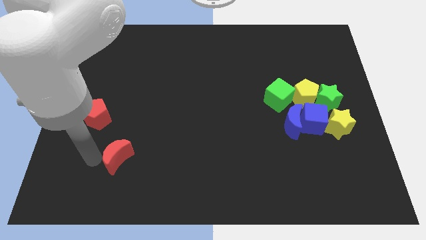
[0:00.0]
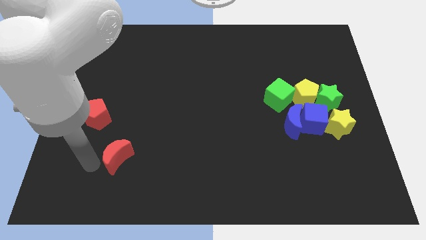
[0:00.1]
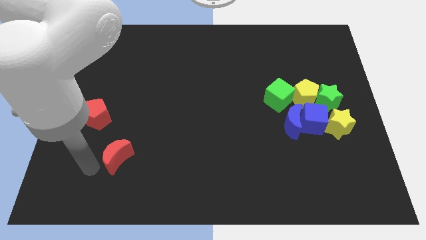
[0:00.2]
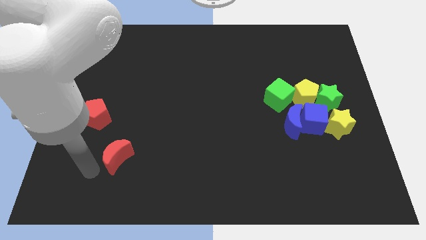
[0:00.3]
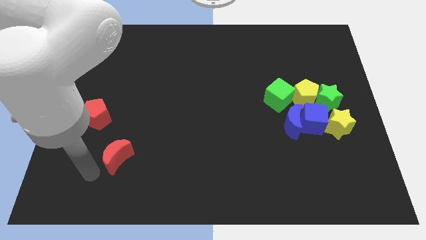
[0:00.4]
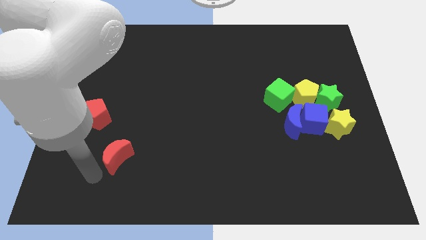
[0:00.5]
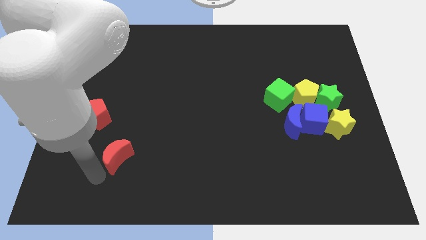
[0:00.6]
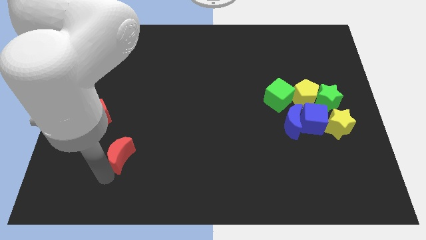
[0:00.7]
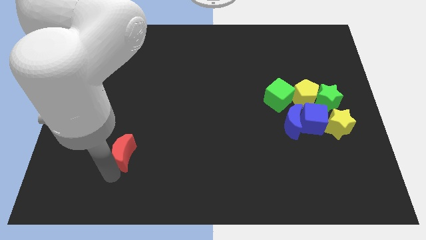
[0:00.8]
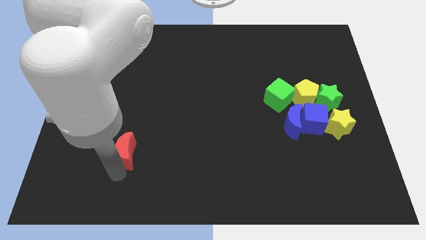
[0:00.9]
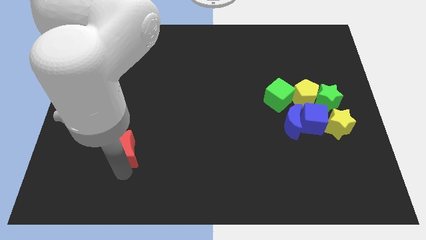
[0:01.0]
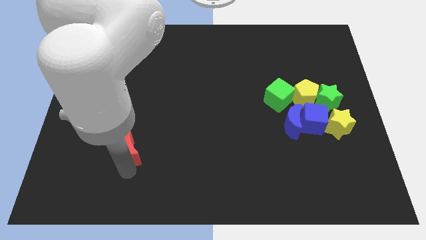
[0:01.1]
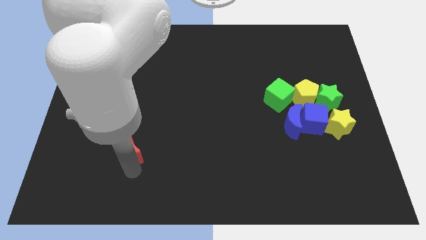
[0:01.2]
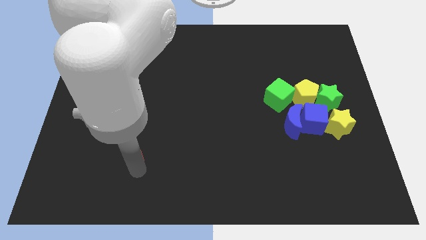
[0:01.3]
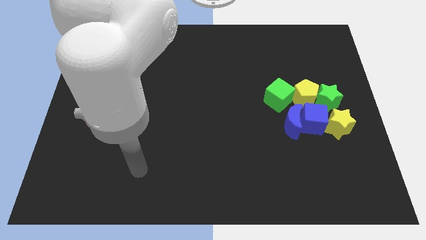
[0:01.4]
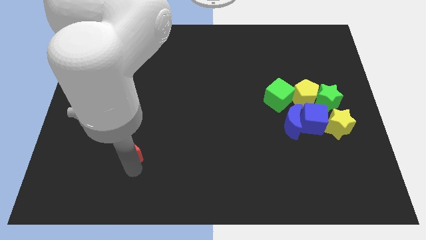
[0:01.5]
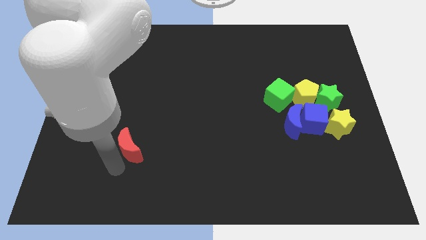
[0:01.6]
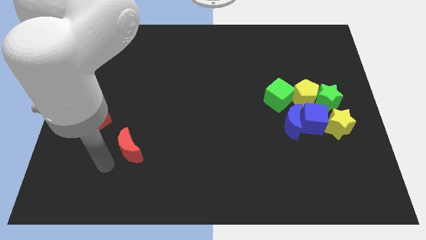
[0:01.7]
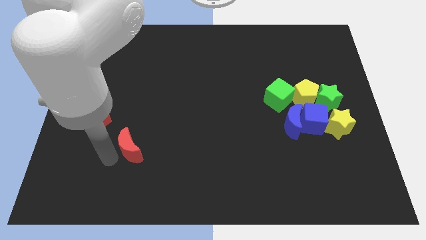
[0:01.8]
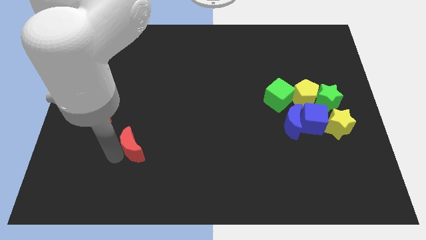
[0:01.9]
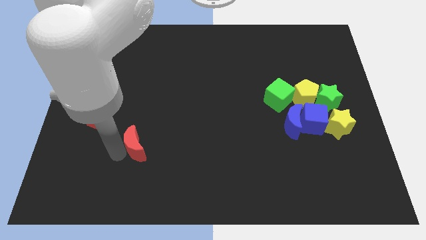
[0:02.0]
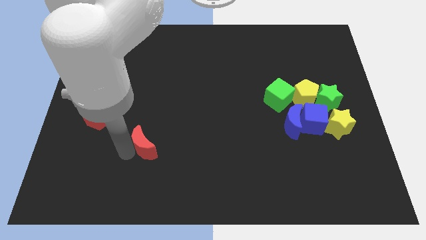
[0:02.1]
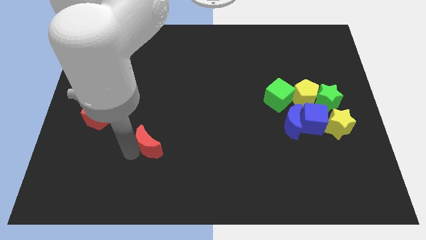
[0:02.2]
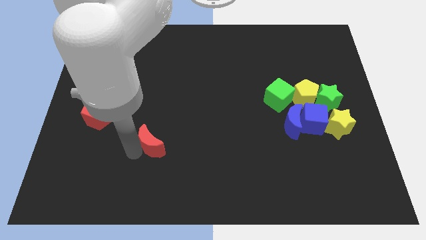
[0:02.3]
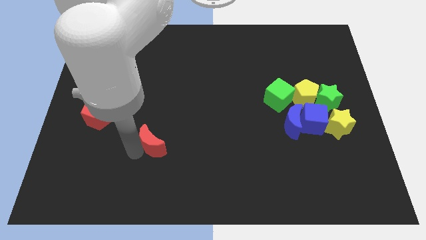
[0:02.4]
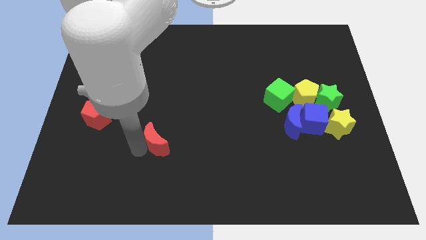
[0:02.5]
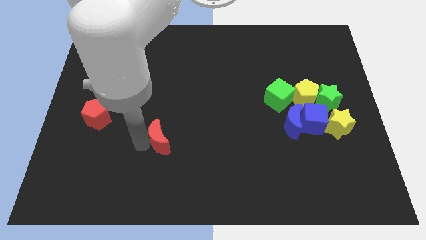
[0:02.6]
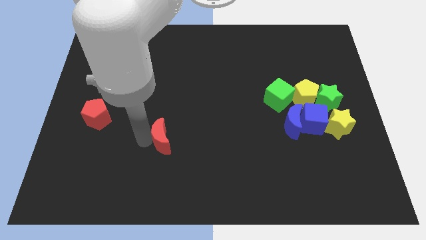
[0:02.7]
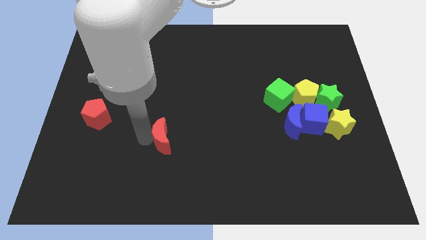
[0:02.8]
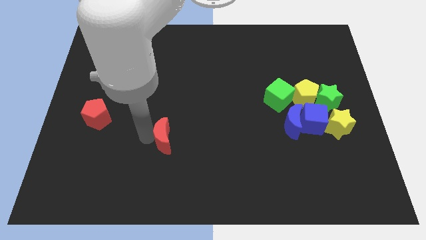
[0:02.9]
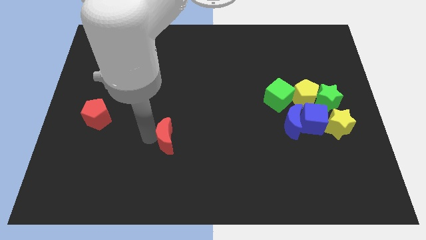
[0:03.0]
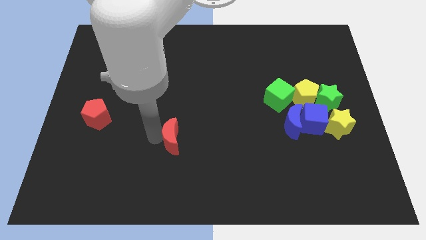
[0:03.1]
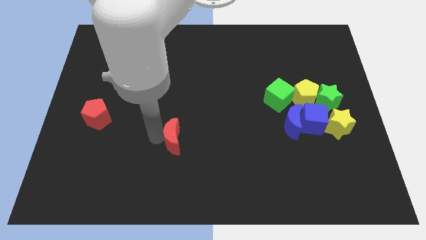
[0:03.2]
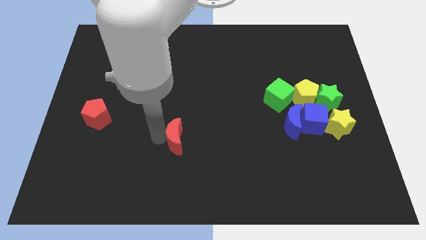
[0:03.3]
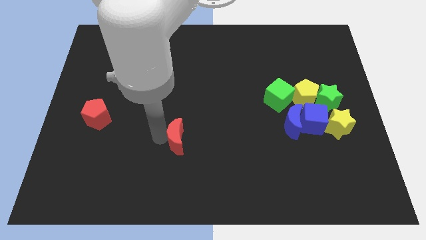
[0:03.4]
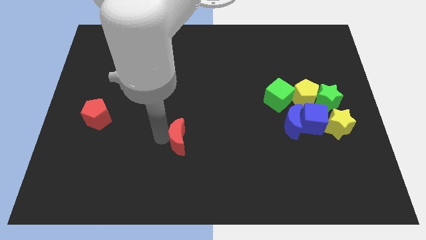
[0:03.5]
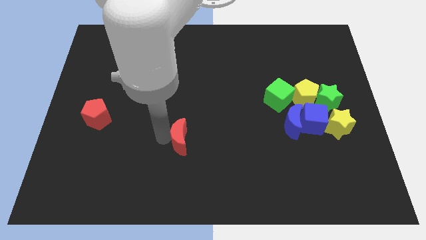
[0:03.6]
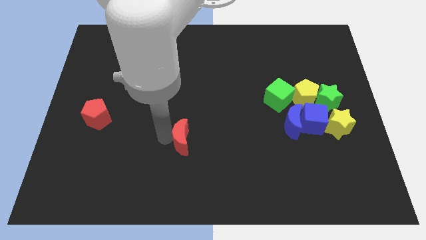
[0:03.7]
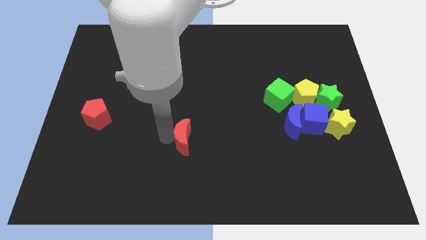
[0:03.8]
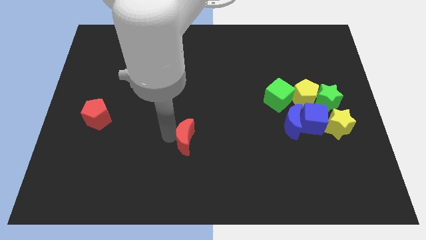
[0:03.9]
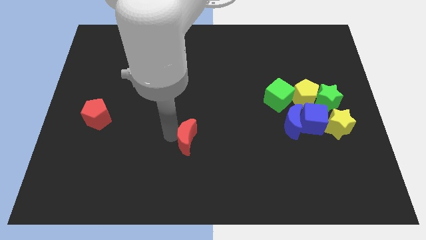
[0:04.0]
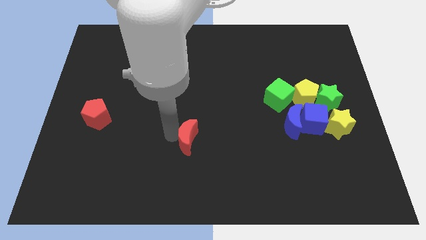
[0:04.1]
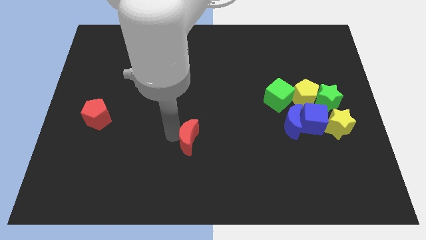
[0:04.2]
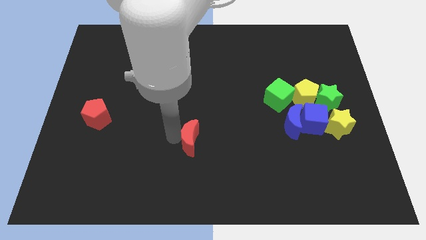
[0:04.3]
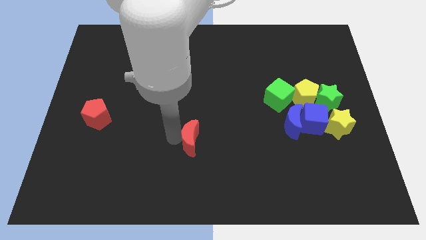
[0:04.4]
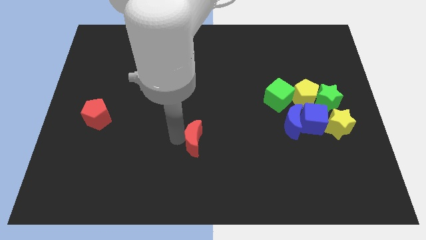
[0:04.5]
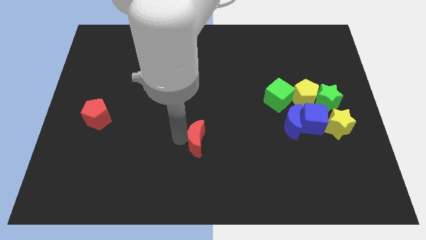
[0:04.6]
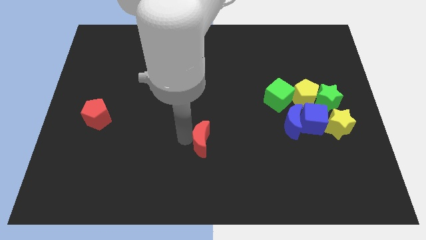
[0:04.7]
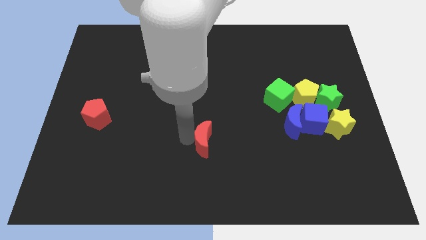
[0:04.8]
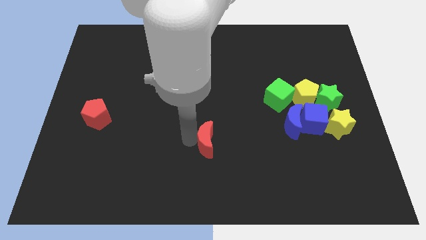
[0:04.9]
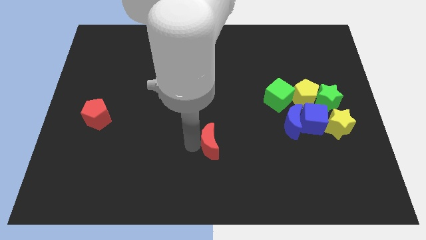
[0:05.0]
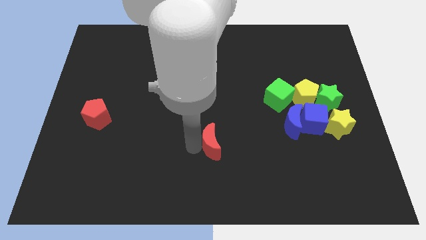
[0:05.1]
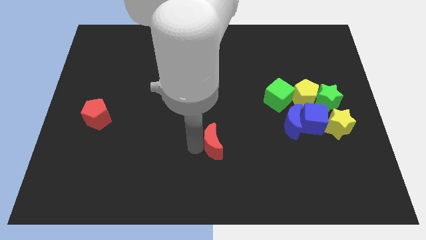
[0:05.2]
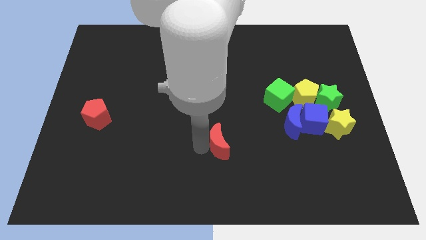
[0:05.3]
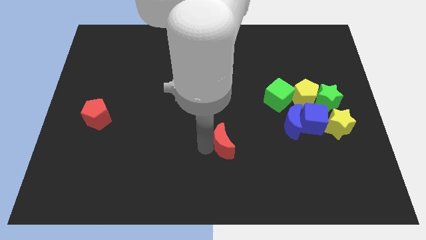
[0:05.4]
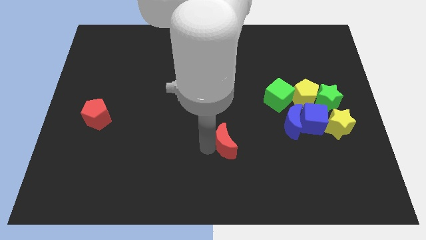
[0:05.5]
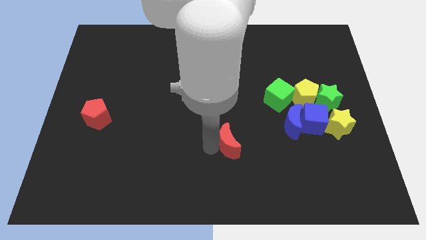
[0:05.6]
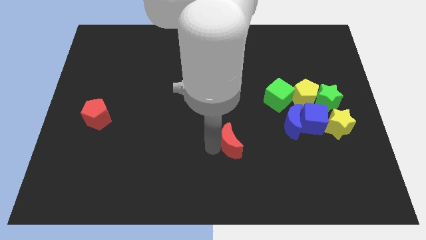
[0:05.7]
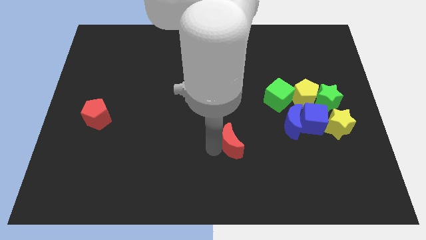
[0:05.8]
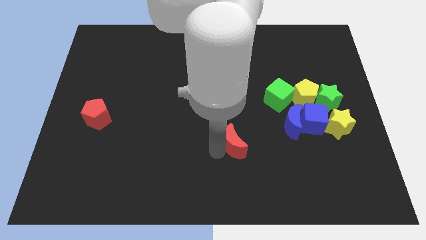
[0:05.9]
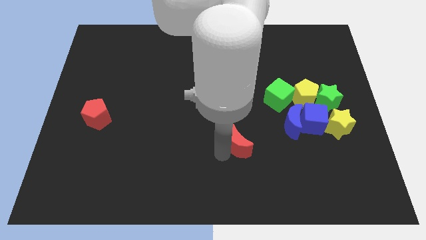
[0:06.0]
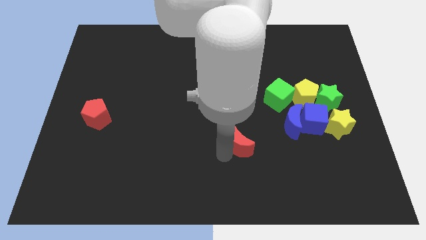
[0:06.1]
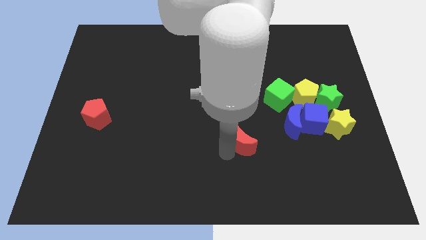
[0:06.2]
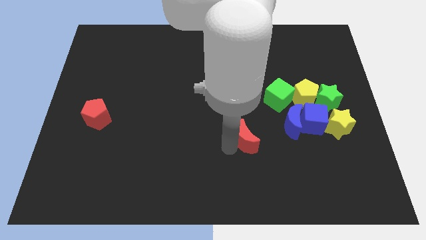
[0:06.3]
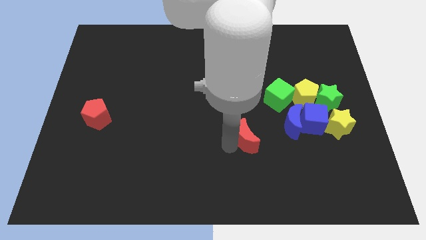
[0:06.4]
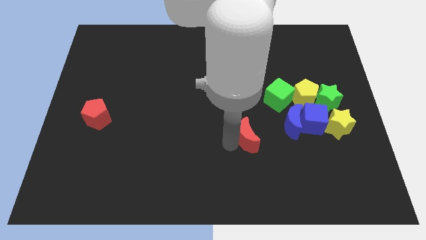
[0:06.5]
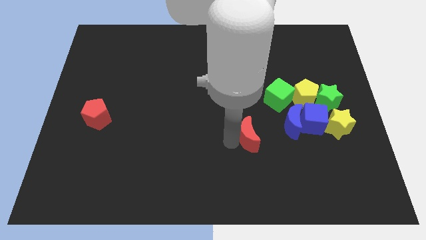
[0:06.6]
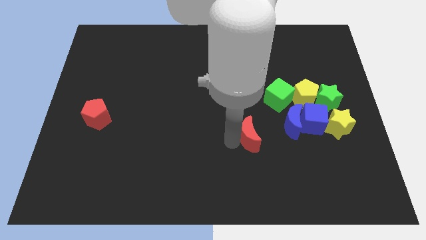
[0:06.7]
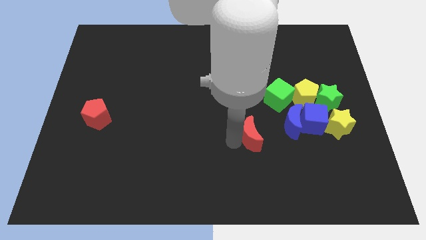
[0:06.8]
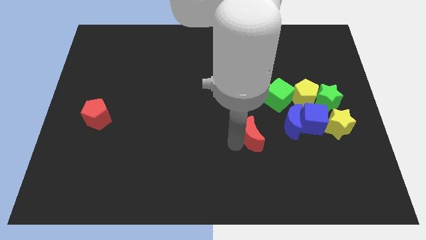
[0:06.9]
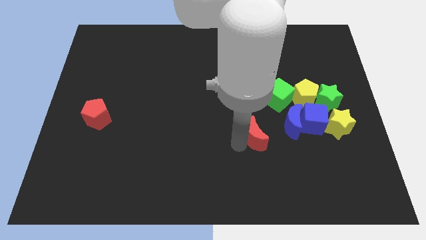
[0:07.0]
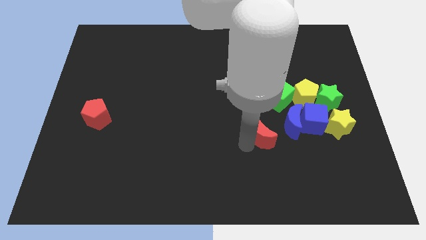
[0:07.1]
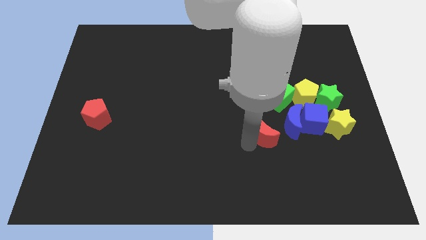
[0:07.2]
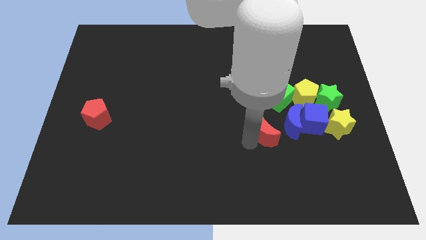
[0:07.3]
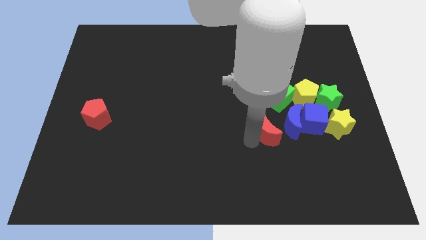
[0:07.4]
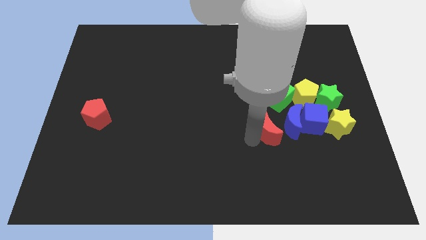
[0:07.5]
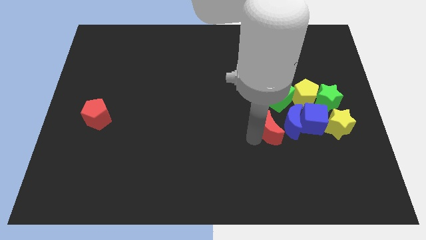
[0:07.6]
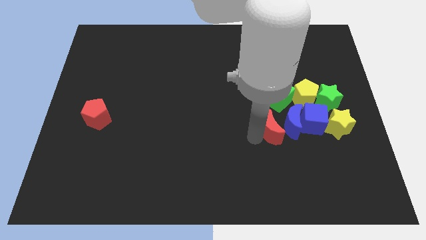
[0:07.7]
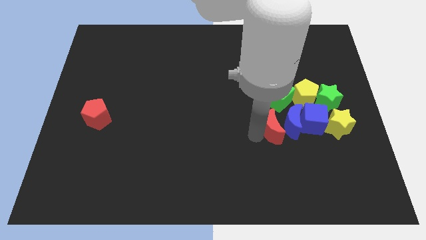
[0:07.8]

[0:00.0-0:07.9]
push the red moon into the group of blocks

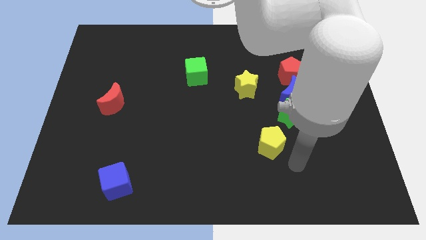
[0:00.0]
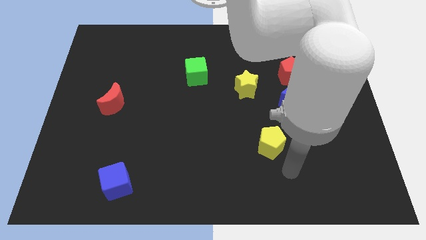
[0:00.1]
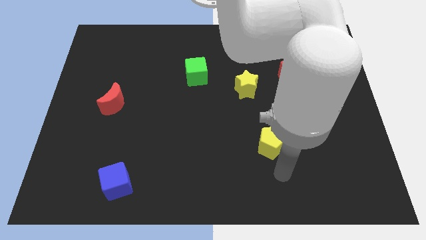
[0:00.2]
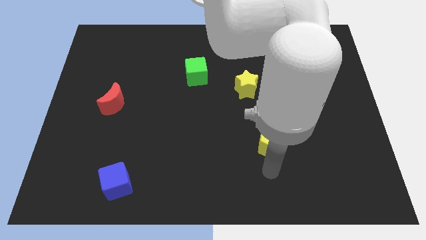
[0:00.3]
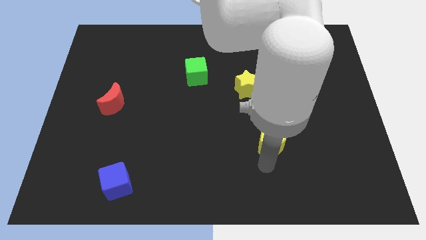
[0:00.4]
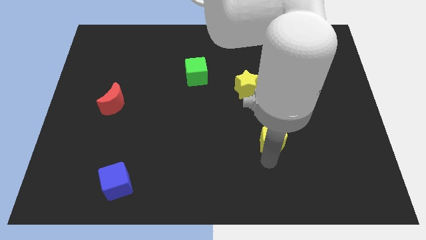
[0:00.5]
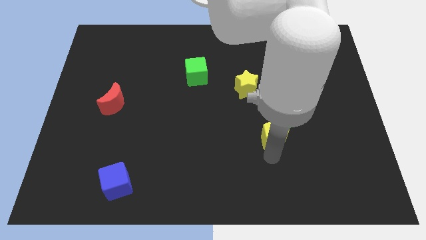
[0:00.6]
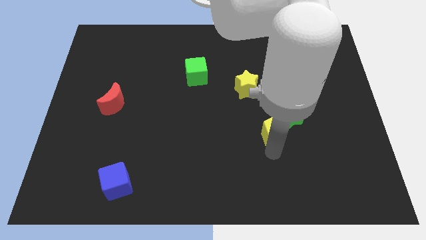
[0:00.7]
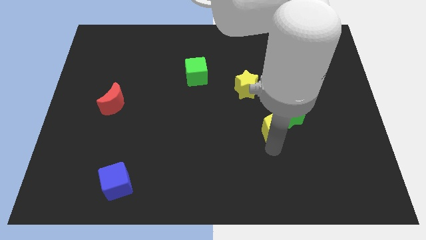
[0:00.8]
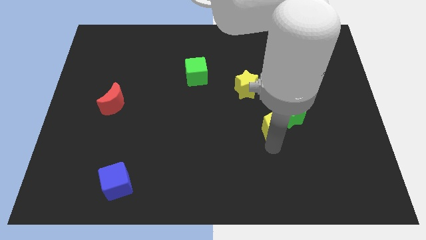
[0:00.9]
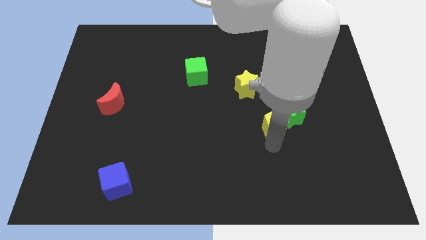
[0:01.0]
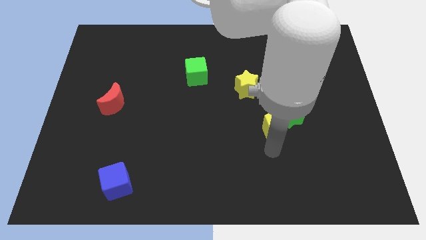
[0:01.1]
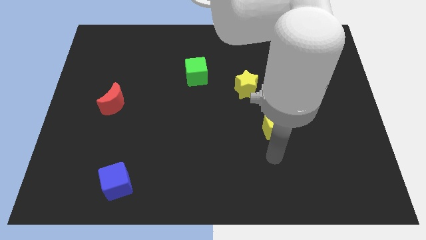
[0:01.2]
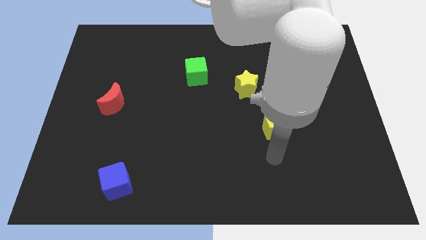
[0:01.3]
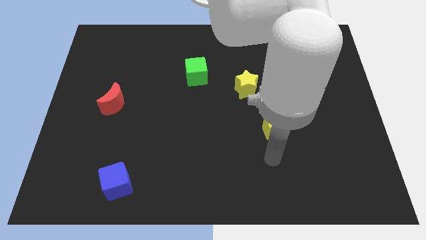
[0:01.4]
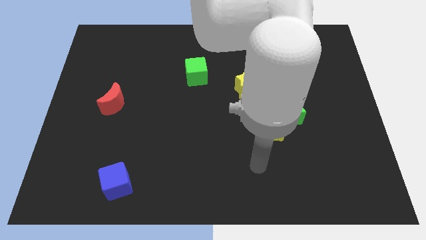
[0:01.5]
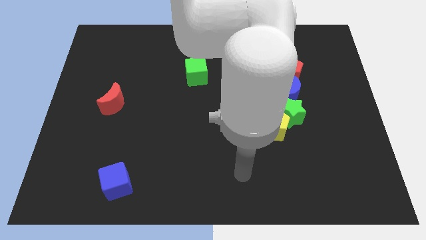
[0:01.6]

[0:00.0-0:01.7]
slightly move the yellow pentagon towards the green star
